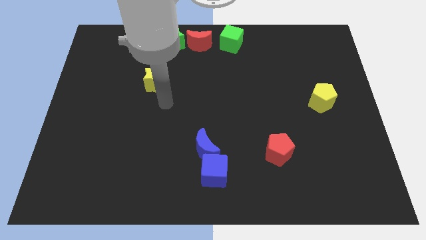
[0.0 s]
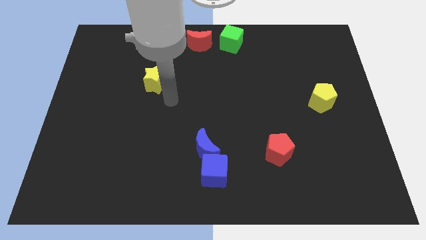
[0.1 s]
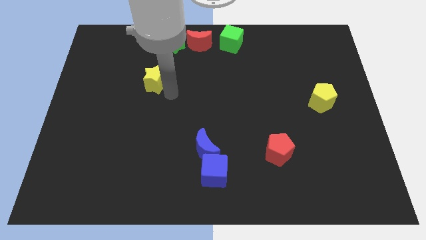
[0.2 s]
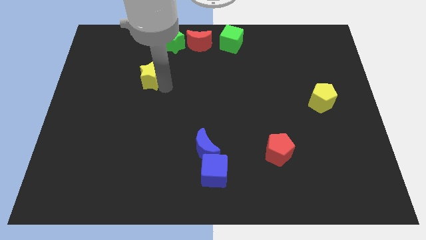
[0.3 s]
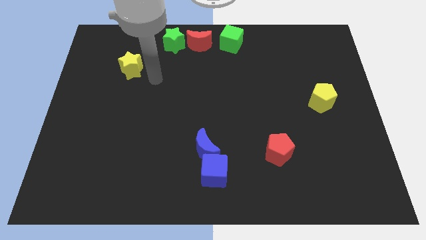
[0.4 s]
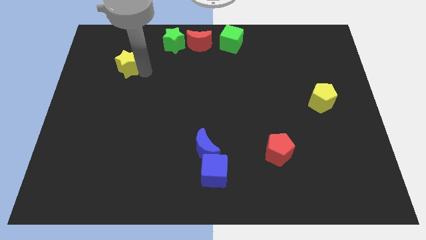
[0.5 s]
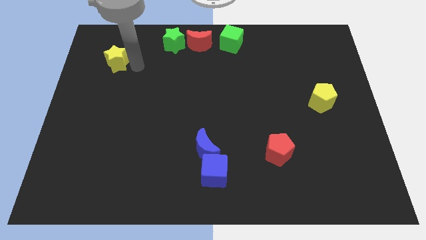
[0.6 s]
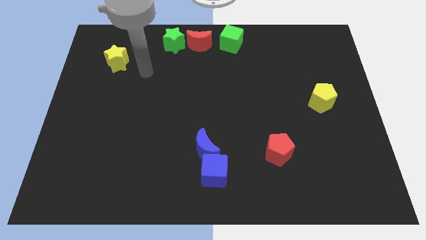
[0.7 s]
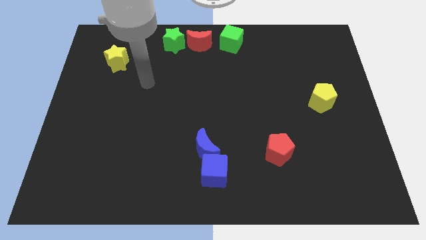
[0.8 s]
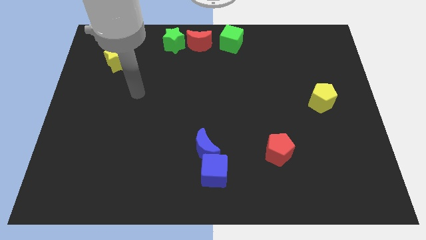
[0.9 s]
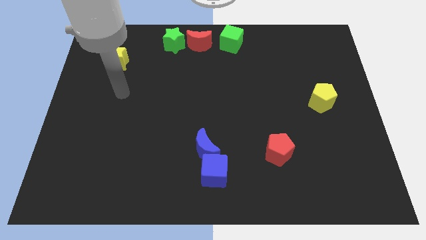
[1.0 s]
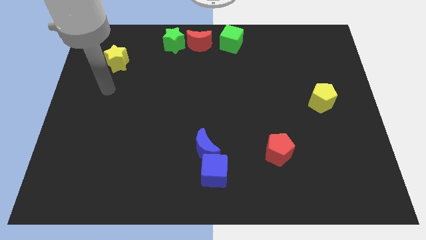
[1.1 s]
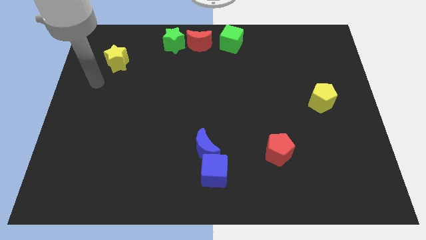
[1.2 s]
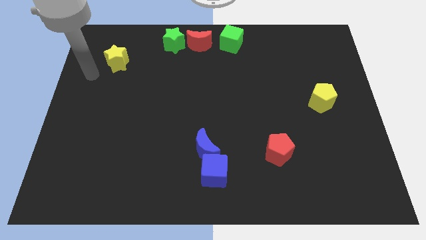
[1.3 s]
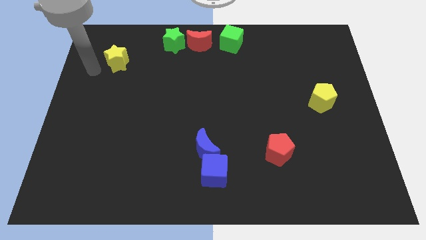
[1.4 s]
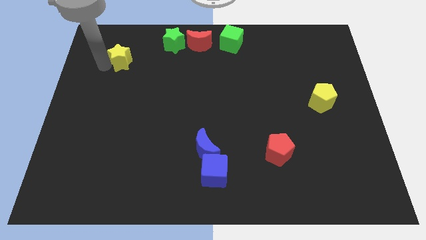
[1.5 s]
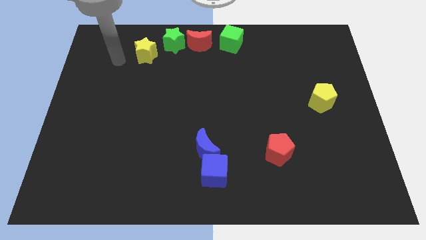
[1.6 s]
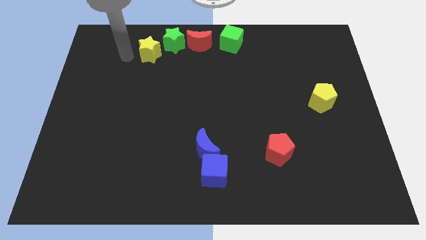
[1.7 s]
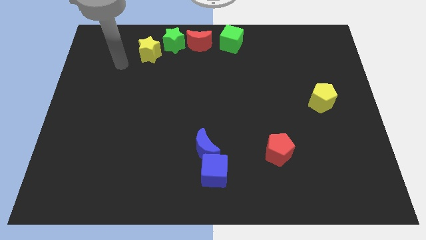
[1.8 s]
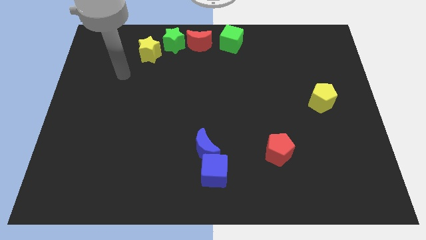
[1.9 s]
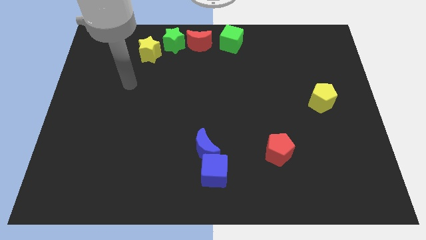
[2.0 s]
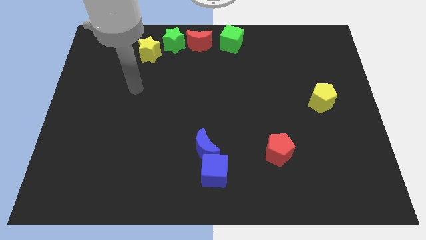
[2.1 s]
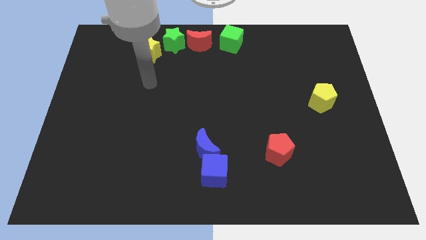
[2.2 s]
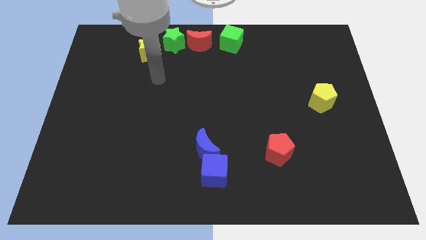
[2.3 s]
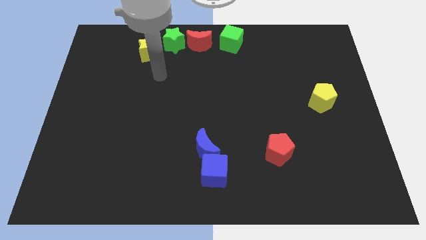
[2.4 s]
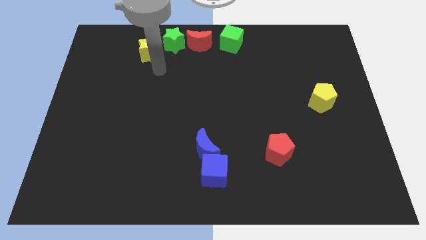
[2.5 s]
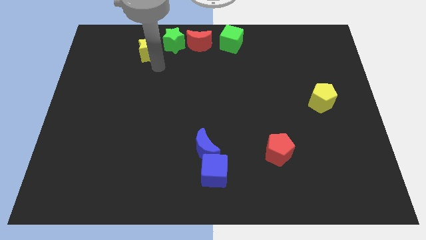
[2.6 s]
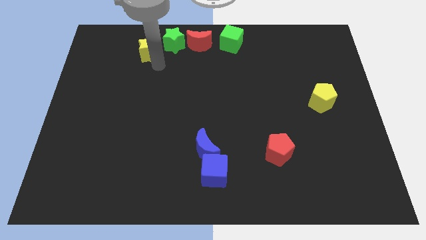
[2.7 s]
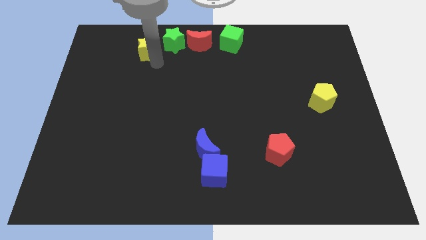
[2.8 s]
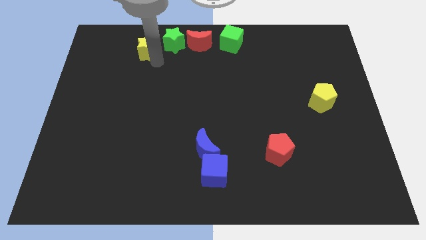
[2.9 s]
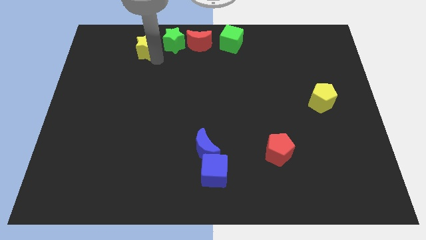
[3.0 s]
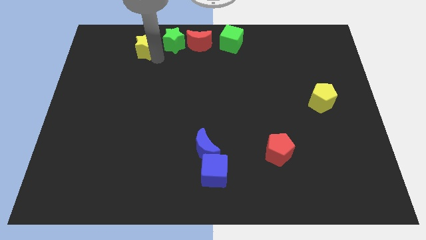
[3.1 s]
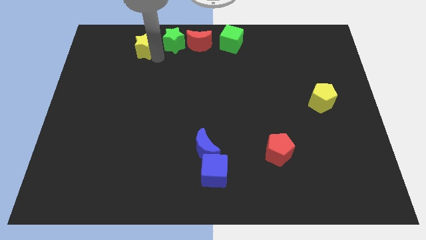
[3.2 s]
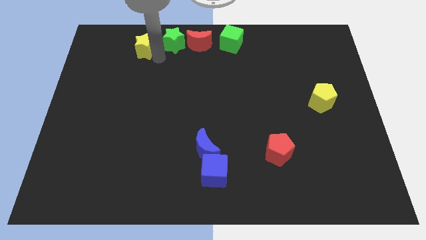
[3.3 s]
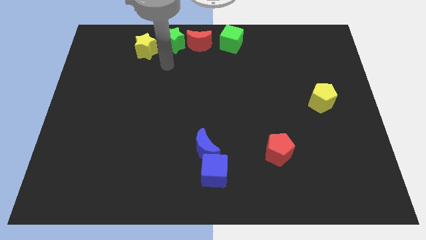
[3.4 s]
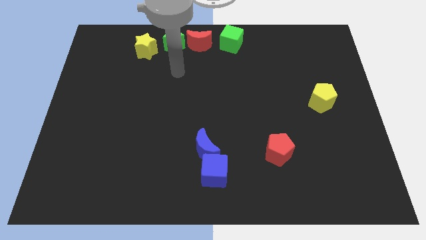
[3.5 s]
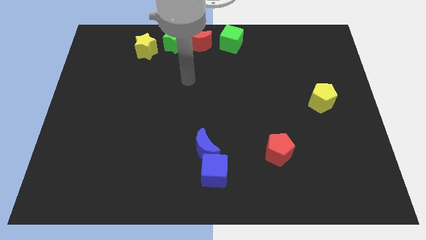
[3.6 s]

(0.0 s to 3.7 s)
move the yellow star to the left of the green star

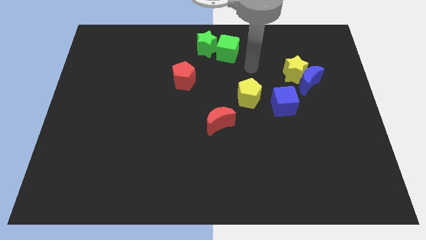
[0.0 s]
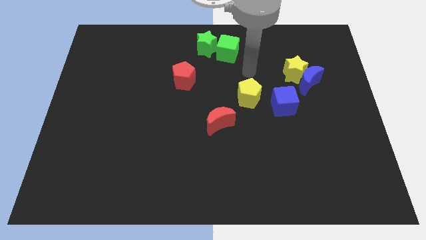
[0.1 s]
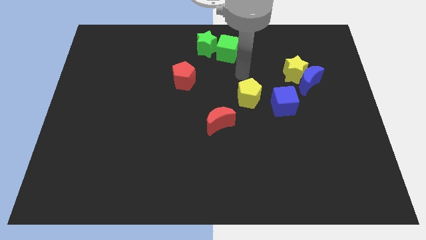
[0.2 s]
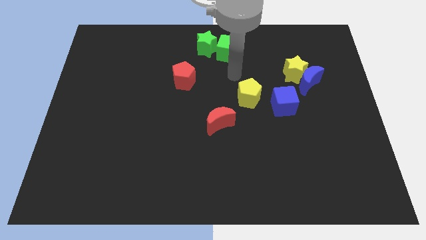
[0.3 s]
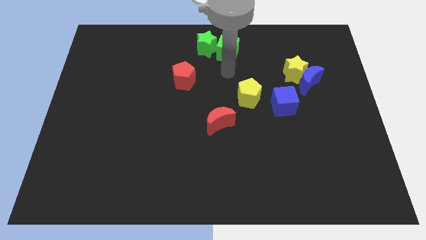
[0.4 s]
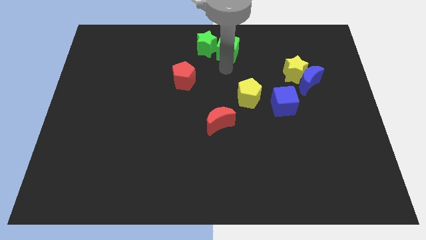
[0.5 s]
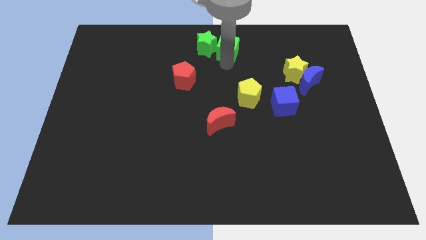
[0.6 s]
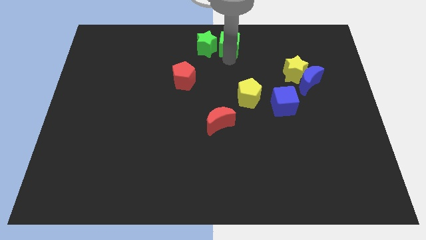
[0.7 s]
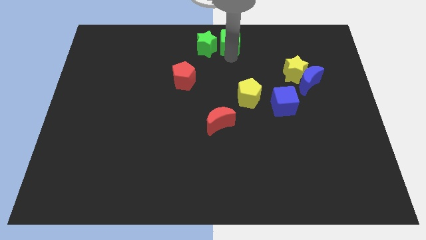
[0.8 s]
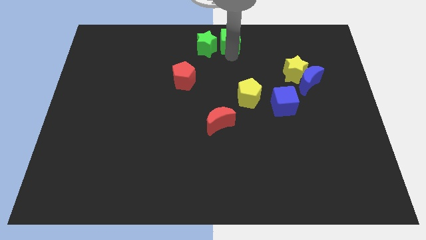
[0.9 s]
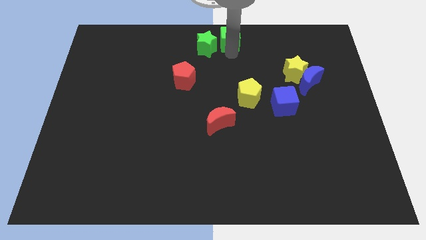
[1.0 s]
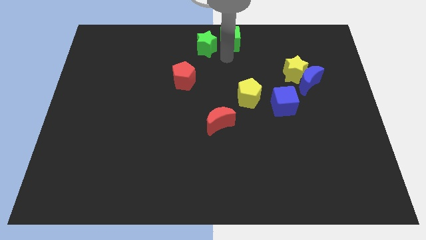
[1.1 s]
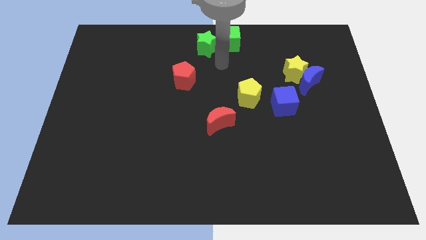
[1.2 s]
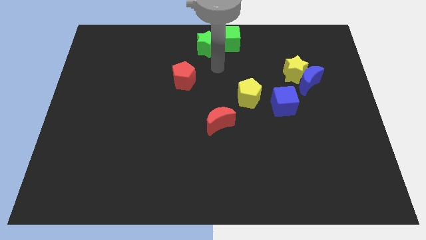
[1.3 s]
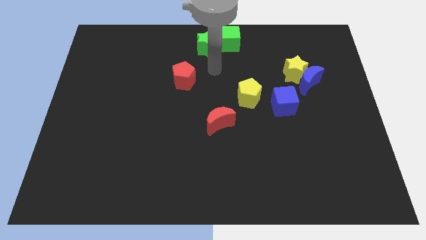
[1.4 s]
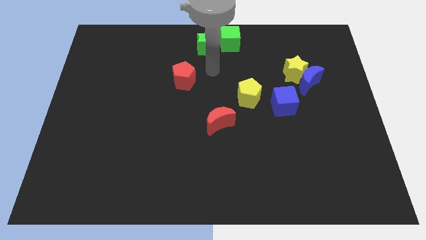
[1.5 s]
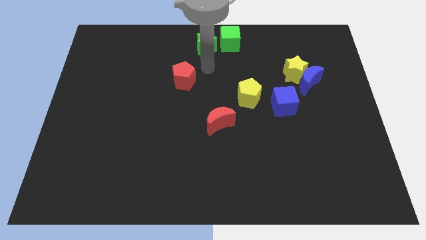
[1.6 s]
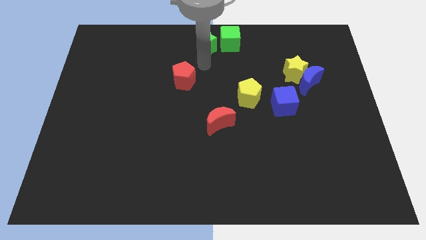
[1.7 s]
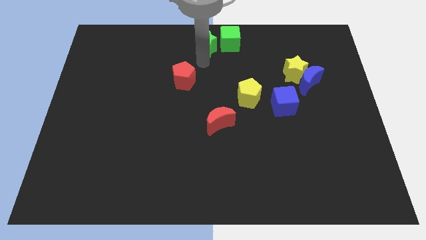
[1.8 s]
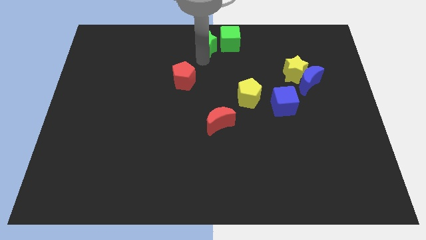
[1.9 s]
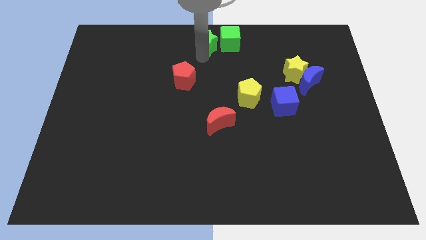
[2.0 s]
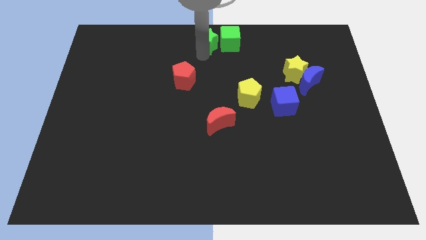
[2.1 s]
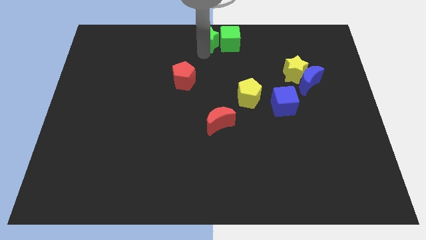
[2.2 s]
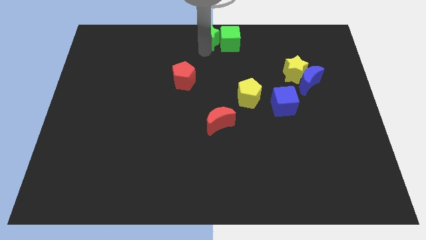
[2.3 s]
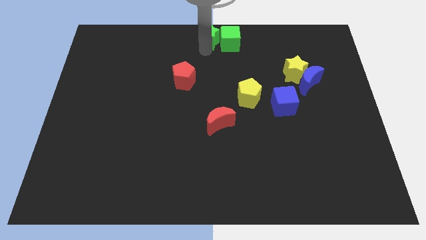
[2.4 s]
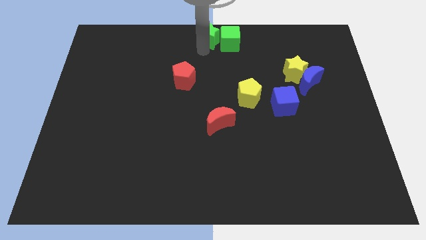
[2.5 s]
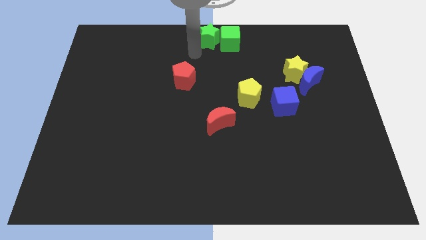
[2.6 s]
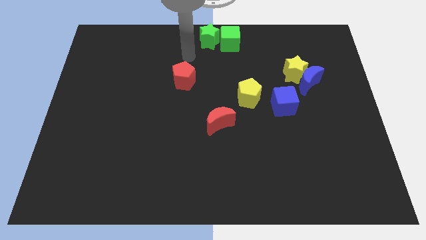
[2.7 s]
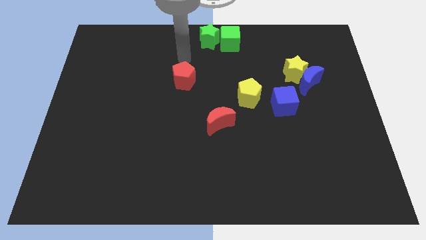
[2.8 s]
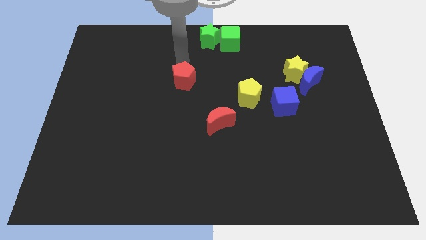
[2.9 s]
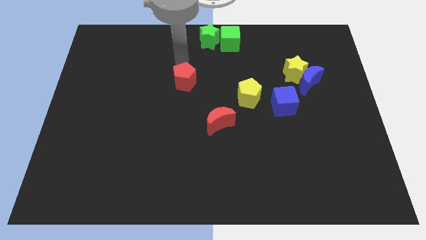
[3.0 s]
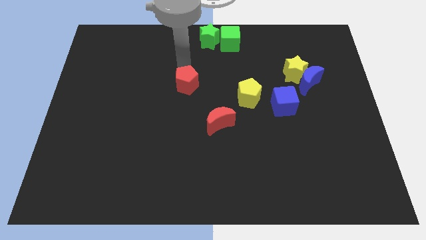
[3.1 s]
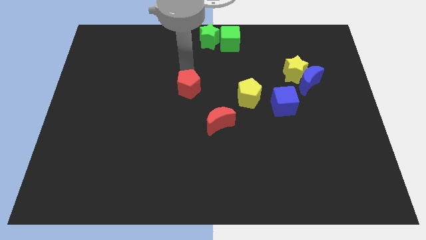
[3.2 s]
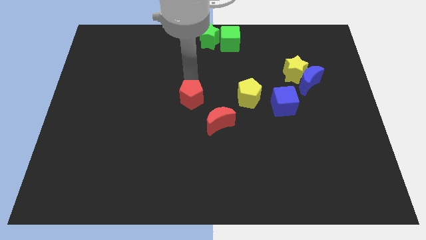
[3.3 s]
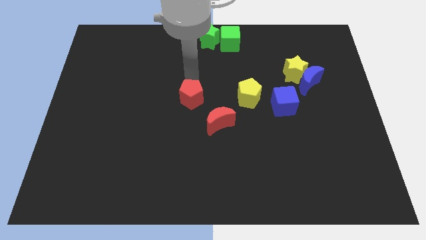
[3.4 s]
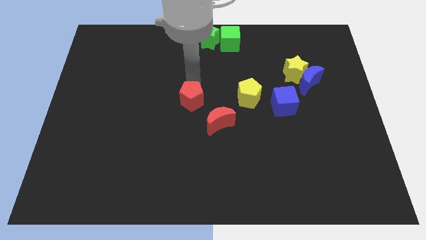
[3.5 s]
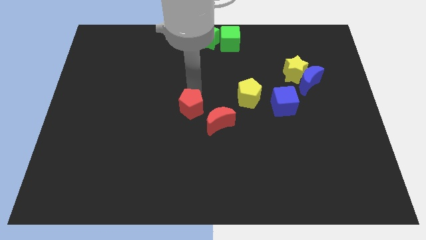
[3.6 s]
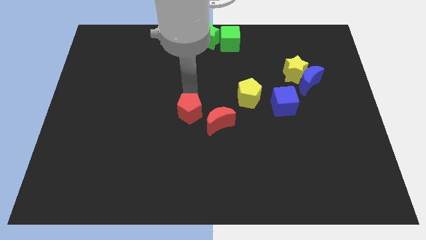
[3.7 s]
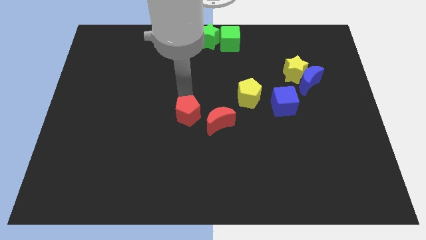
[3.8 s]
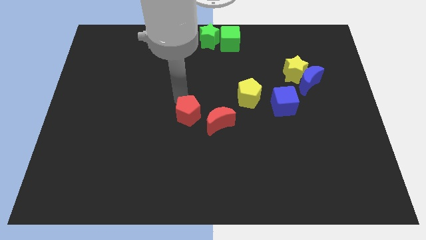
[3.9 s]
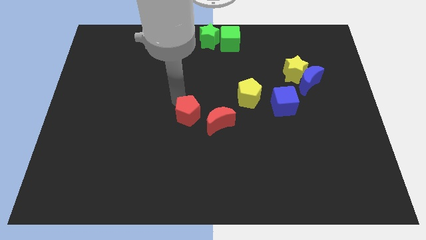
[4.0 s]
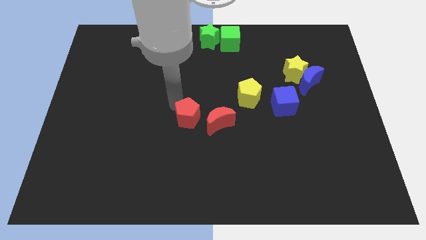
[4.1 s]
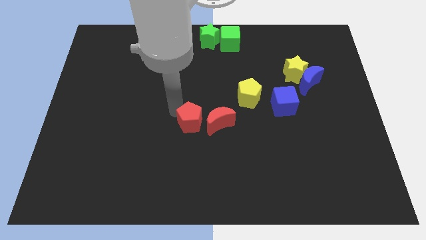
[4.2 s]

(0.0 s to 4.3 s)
move the red pentagon to the left of the red moon

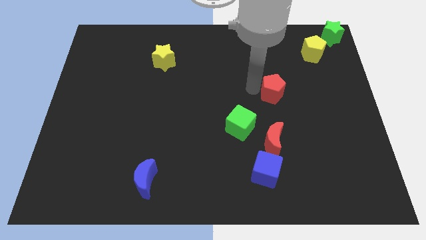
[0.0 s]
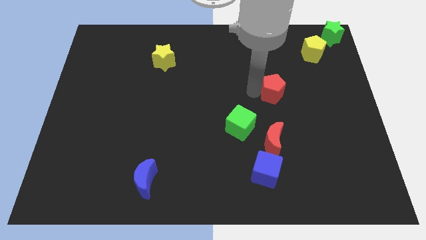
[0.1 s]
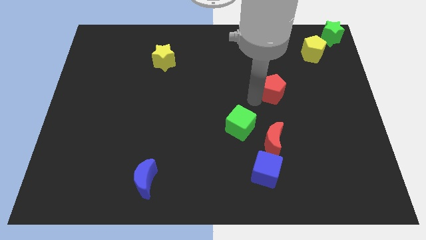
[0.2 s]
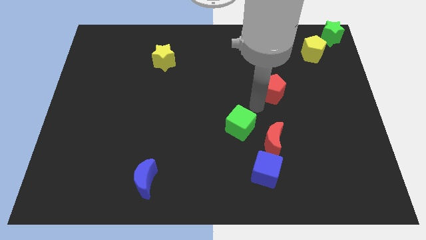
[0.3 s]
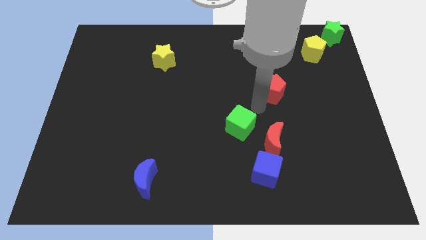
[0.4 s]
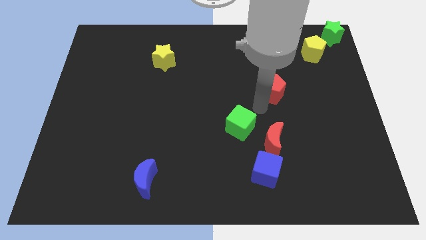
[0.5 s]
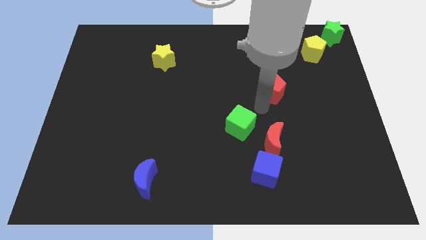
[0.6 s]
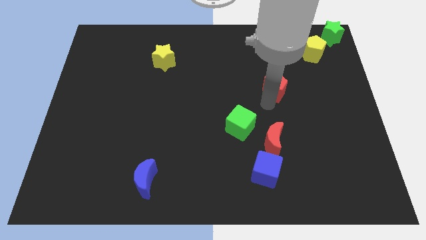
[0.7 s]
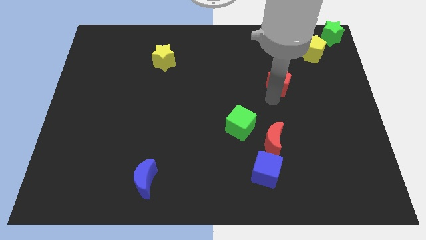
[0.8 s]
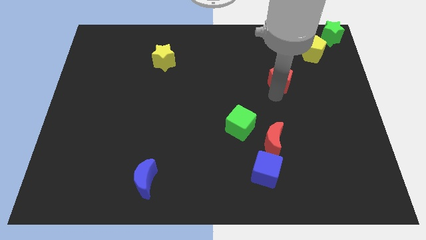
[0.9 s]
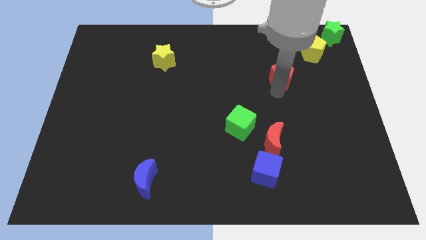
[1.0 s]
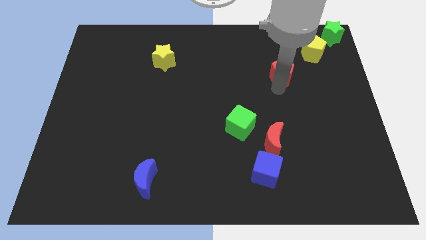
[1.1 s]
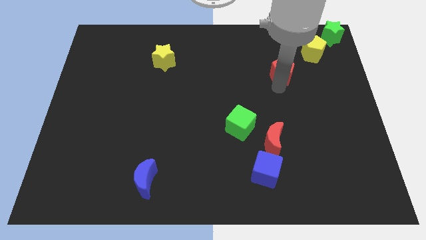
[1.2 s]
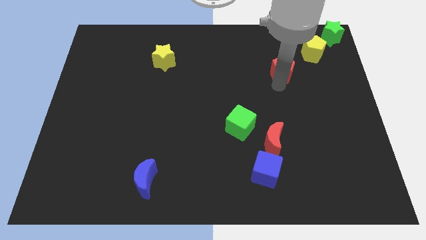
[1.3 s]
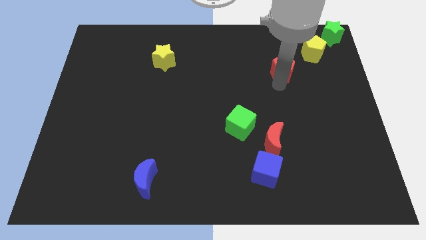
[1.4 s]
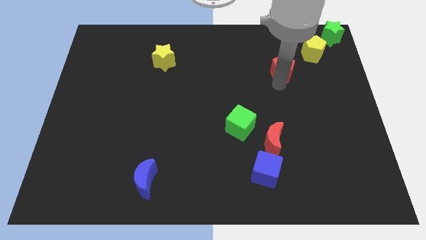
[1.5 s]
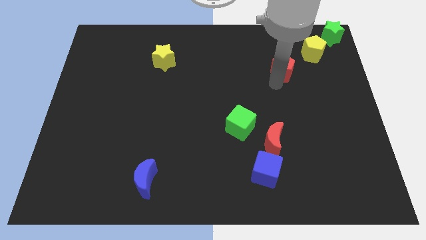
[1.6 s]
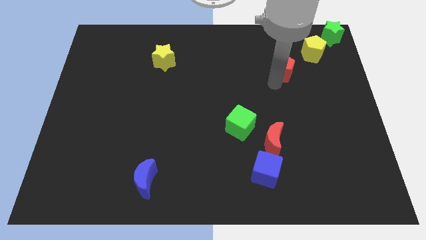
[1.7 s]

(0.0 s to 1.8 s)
push red pentagon diagonally towards yellow pentagon
